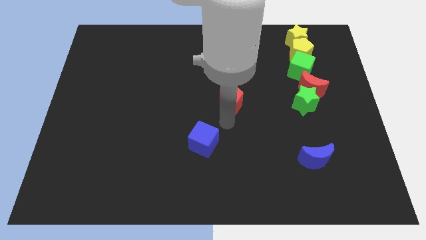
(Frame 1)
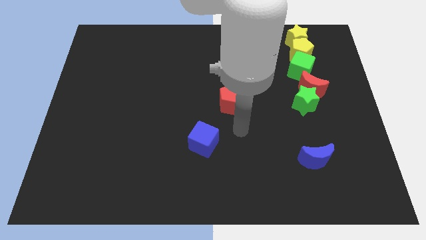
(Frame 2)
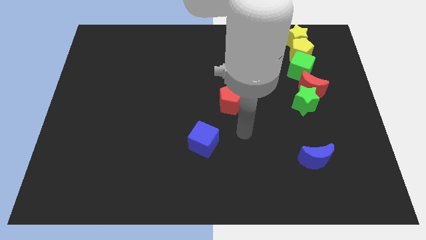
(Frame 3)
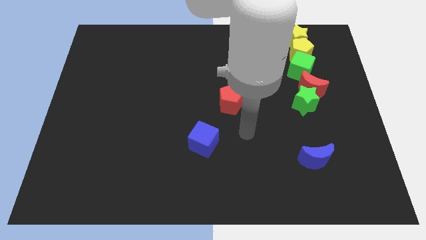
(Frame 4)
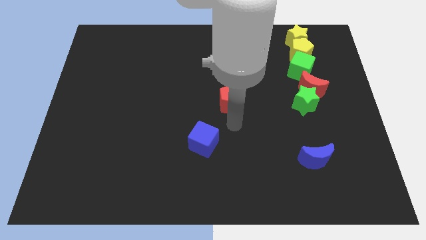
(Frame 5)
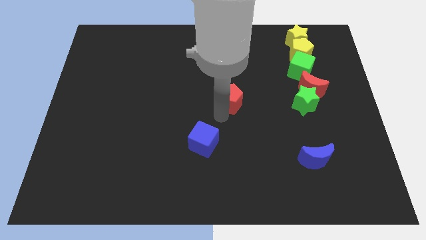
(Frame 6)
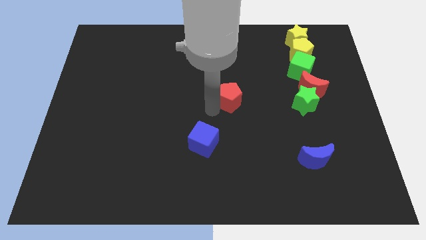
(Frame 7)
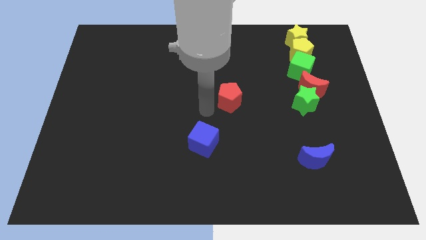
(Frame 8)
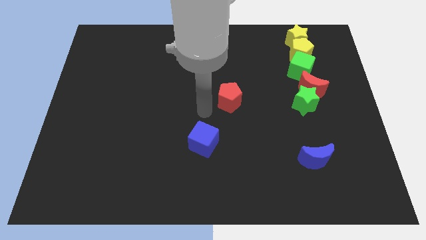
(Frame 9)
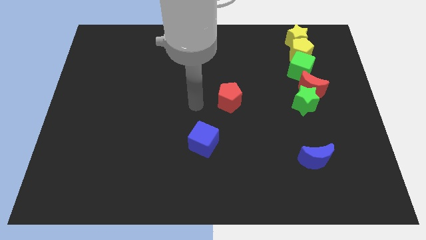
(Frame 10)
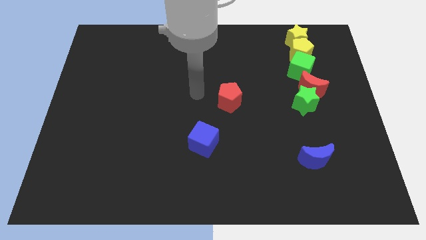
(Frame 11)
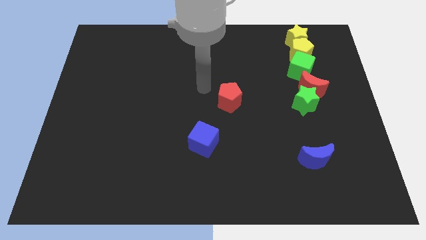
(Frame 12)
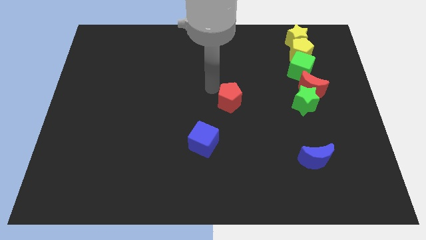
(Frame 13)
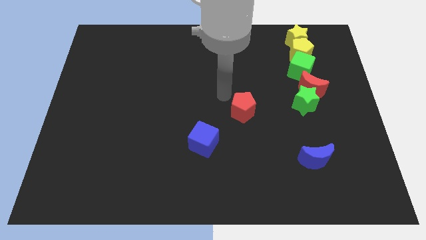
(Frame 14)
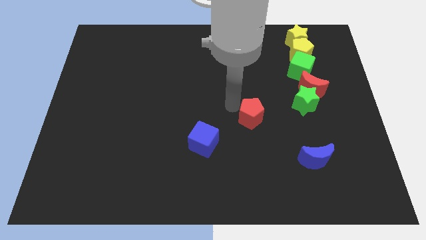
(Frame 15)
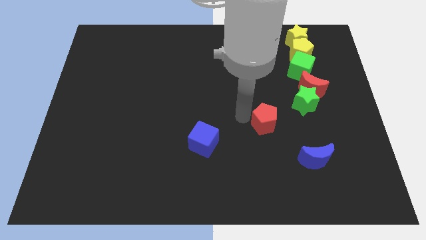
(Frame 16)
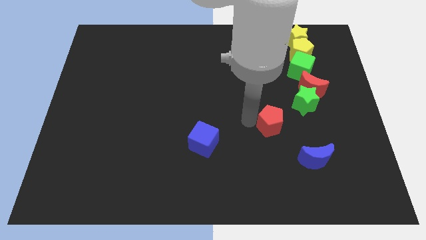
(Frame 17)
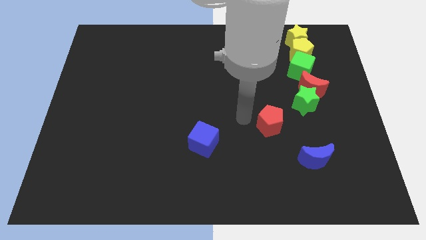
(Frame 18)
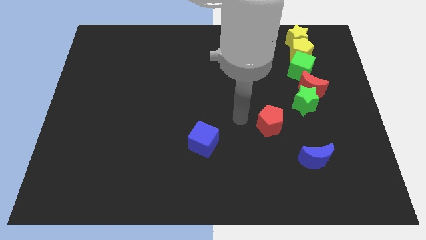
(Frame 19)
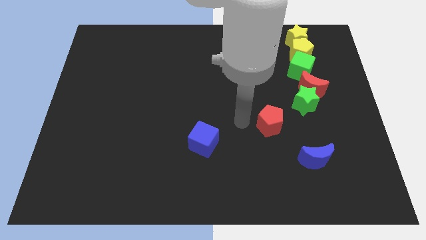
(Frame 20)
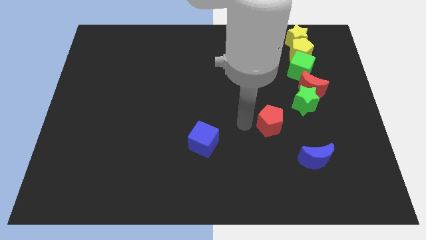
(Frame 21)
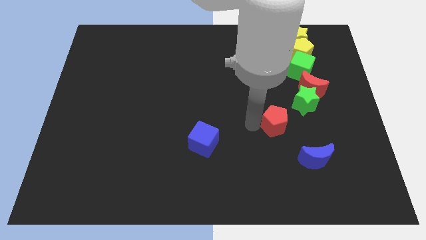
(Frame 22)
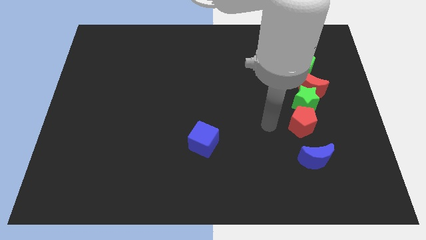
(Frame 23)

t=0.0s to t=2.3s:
move the red pentagon towards the green star

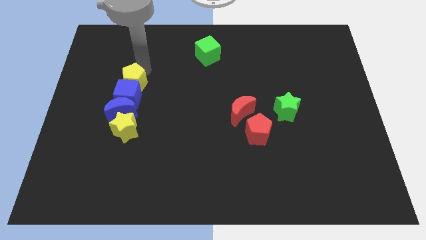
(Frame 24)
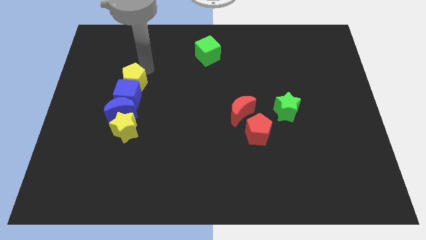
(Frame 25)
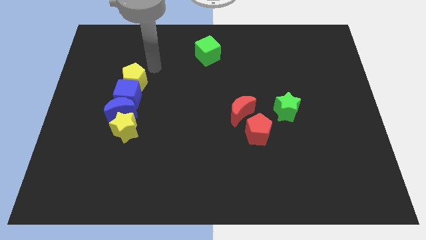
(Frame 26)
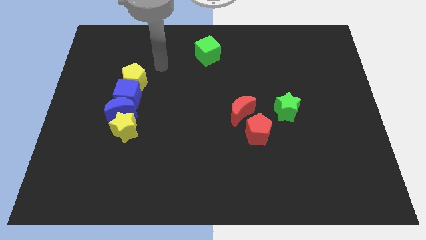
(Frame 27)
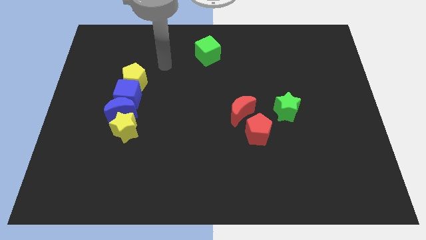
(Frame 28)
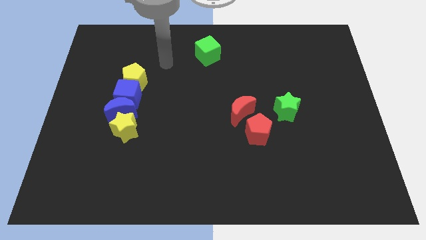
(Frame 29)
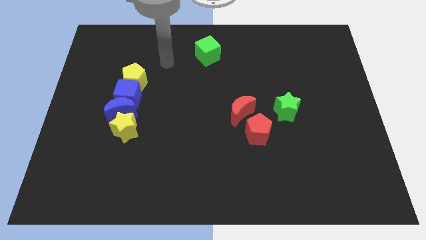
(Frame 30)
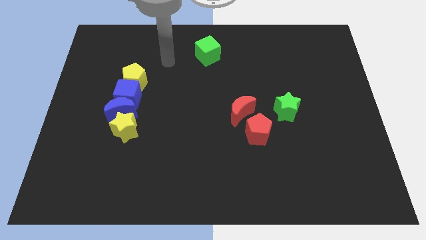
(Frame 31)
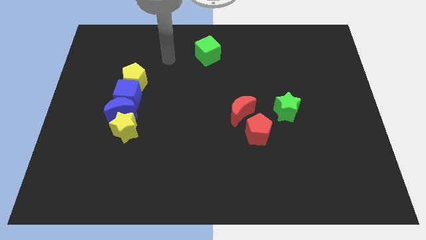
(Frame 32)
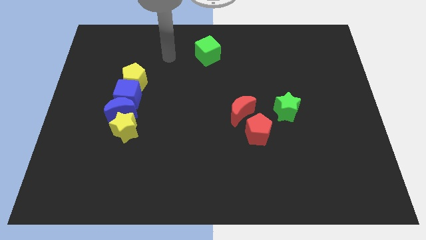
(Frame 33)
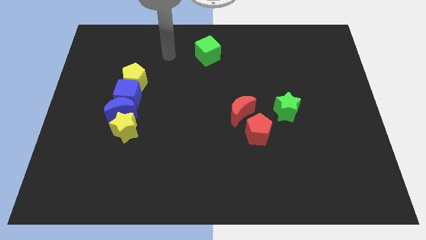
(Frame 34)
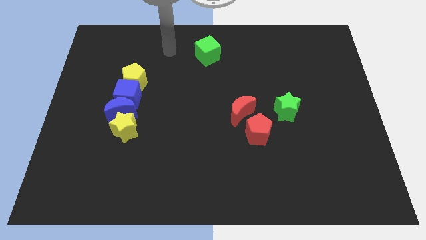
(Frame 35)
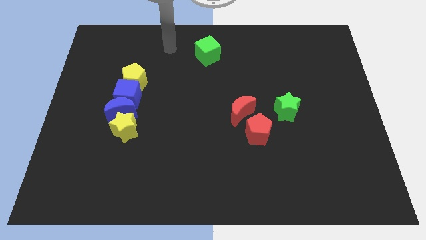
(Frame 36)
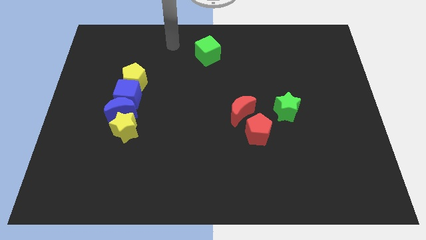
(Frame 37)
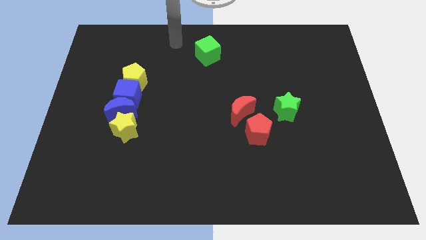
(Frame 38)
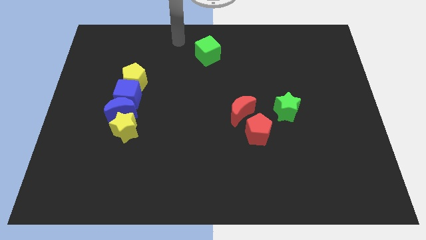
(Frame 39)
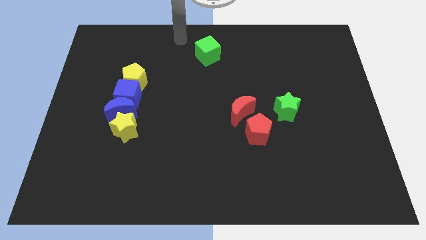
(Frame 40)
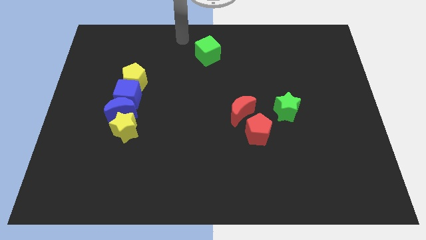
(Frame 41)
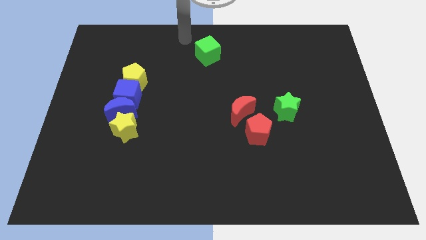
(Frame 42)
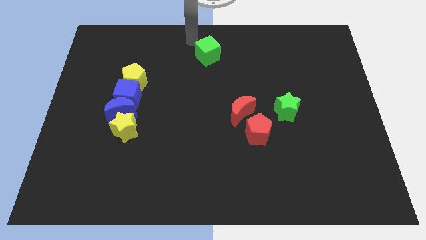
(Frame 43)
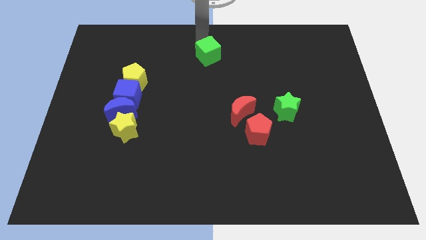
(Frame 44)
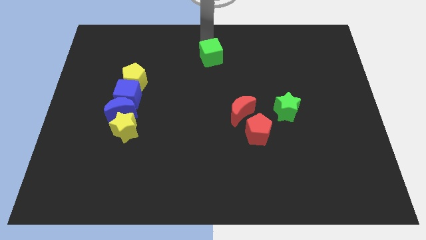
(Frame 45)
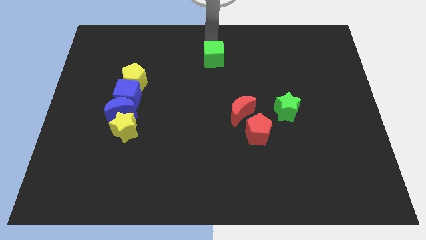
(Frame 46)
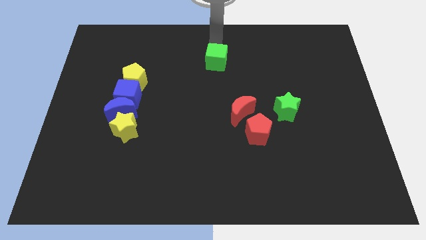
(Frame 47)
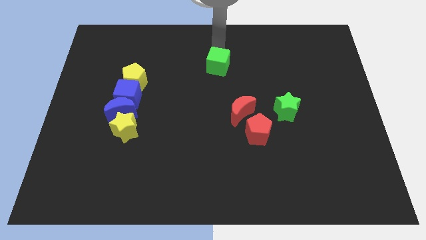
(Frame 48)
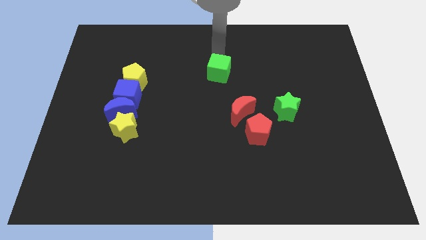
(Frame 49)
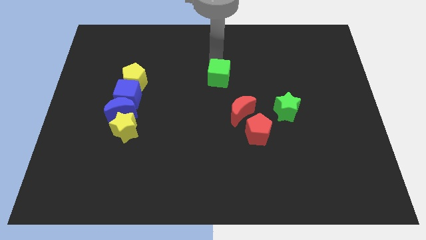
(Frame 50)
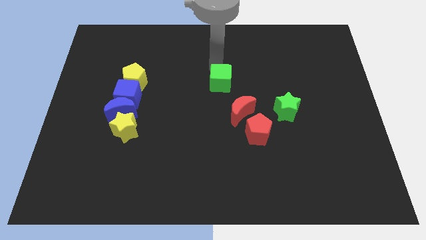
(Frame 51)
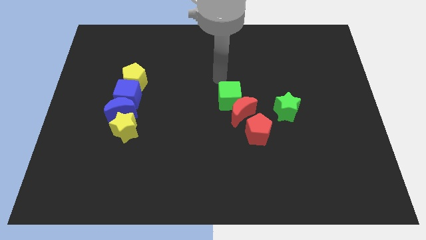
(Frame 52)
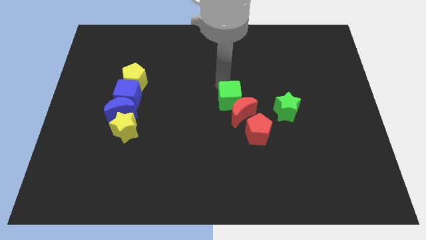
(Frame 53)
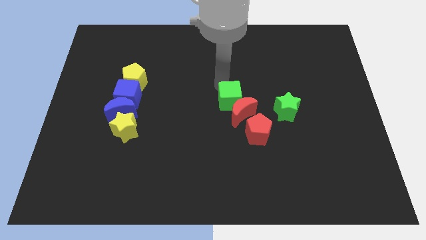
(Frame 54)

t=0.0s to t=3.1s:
push the green cube to the top side of the red crescent

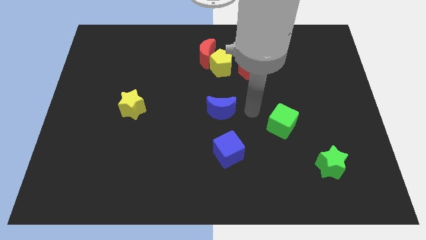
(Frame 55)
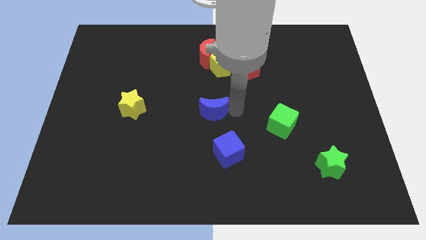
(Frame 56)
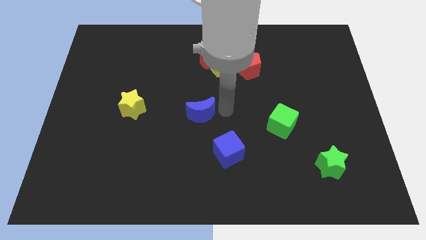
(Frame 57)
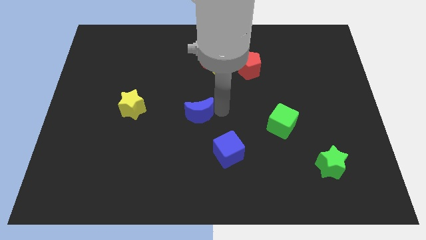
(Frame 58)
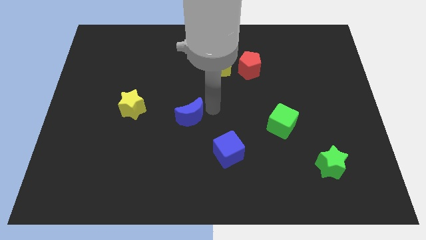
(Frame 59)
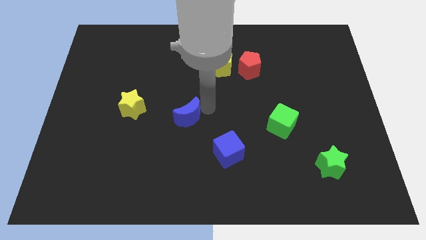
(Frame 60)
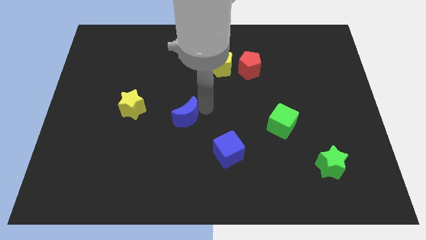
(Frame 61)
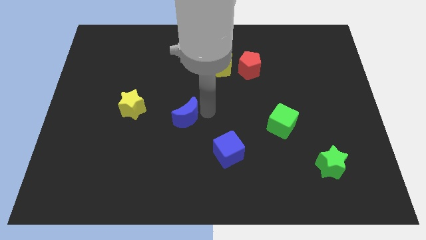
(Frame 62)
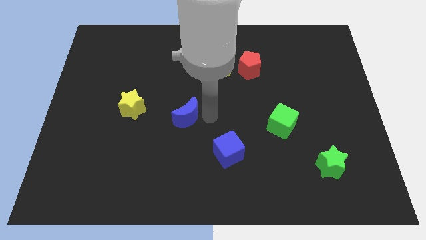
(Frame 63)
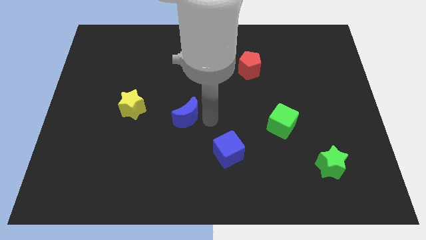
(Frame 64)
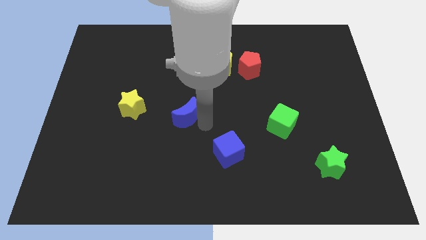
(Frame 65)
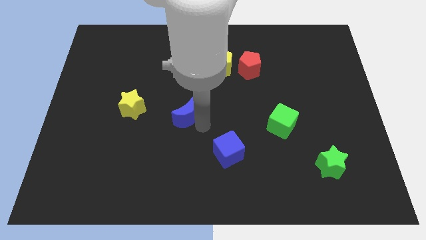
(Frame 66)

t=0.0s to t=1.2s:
move the blue crescent slightly to the left

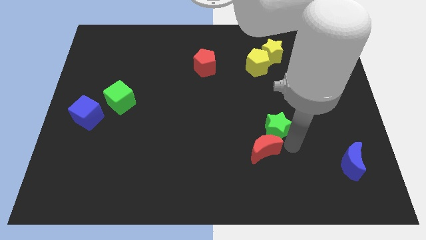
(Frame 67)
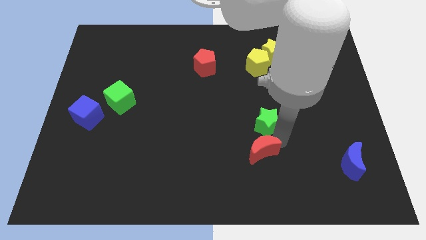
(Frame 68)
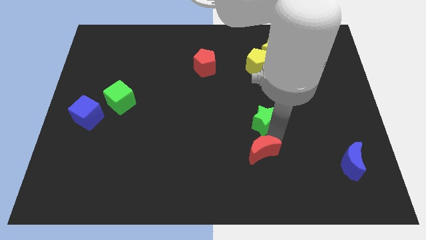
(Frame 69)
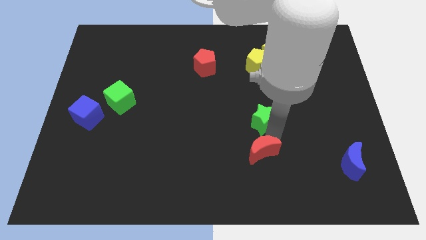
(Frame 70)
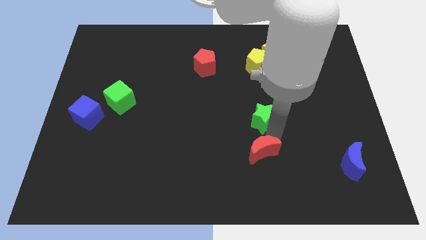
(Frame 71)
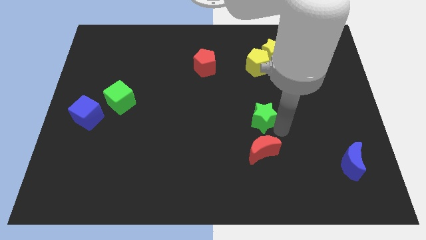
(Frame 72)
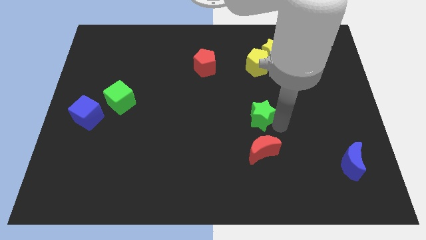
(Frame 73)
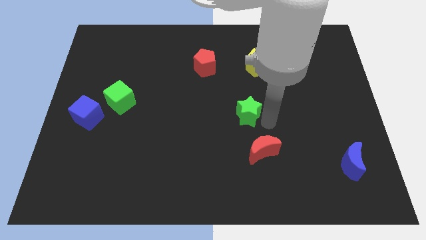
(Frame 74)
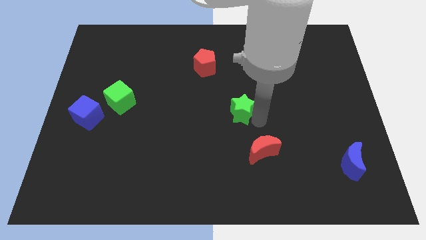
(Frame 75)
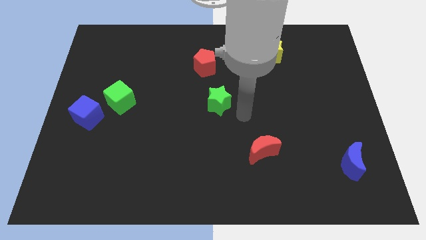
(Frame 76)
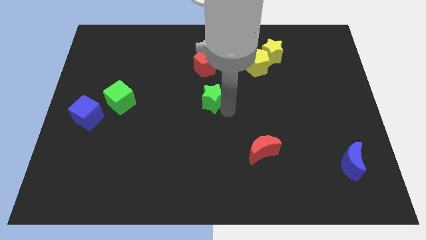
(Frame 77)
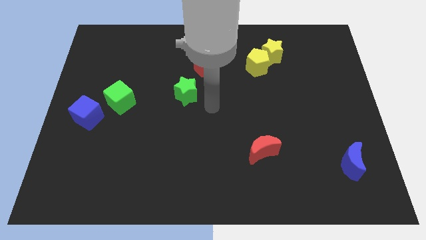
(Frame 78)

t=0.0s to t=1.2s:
place green star to the bottom of red pentagon

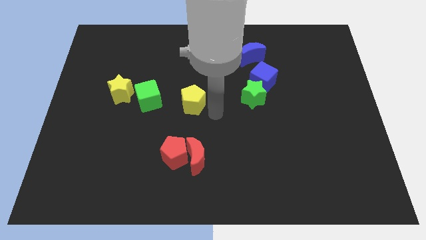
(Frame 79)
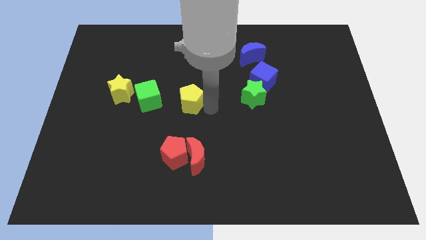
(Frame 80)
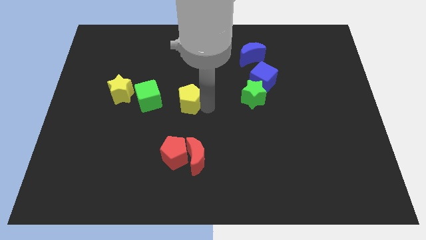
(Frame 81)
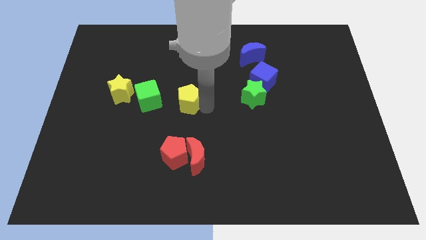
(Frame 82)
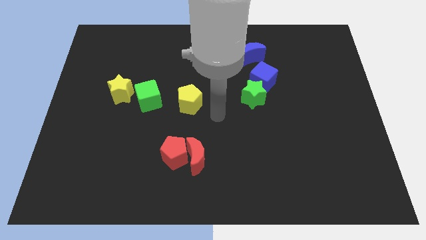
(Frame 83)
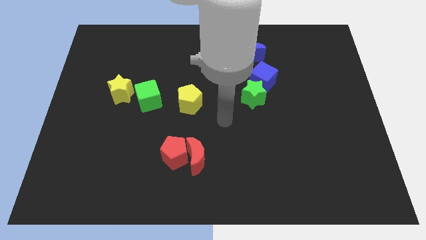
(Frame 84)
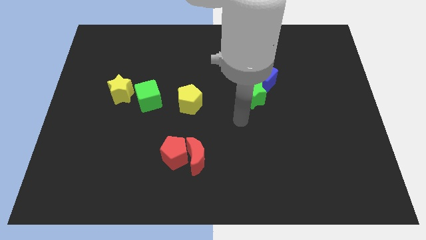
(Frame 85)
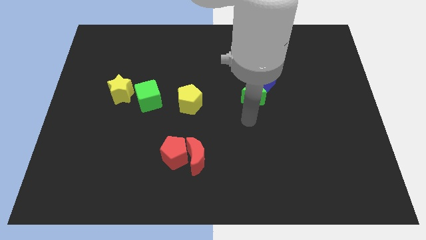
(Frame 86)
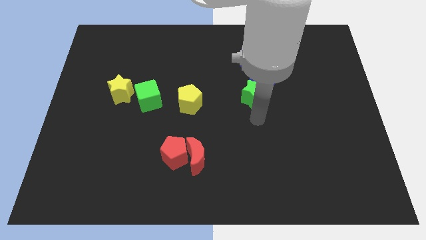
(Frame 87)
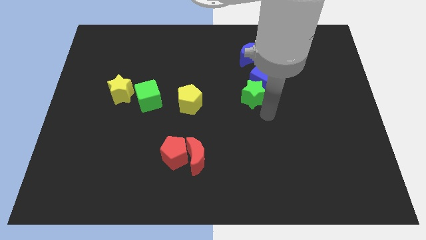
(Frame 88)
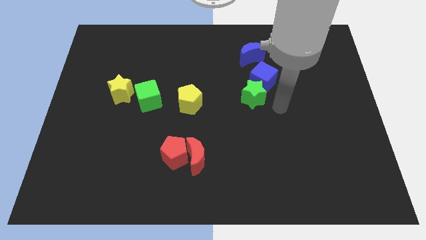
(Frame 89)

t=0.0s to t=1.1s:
move the yellow pentagon to the right side of green cube
